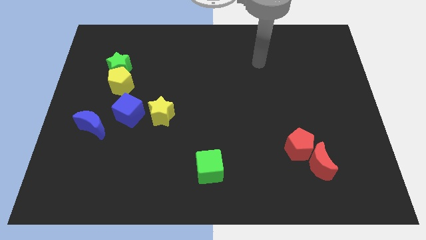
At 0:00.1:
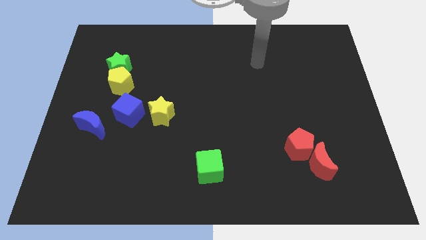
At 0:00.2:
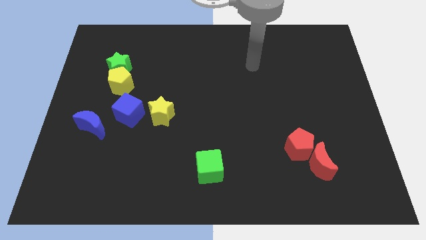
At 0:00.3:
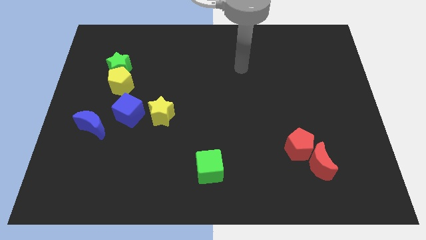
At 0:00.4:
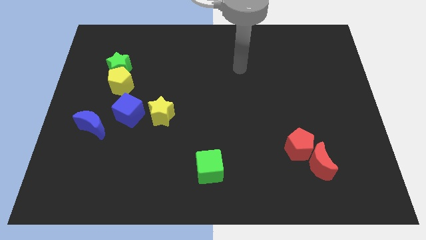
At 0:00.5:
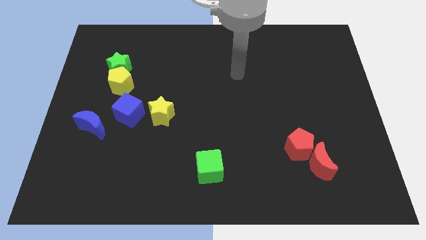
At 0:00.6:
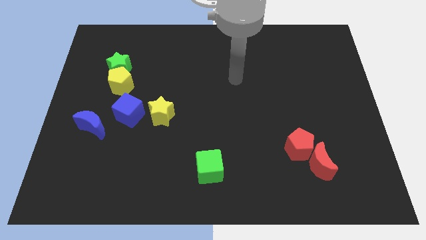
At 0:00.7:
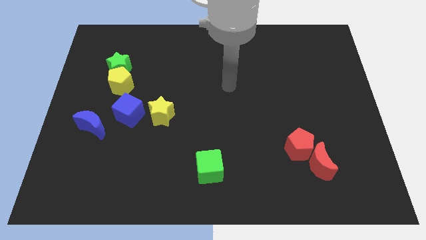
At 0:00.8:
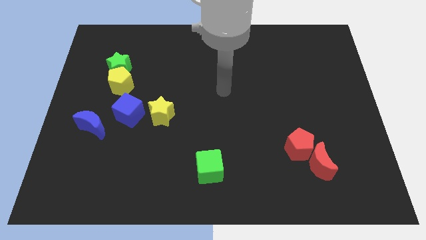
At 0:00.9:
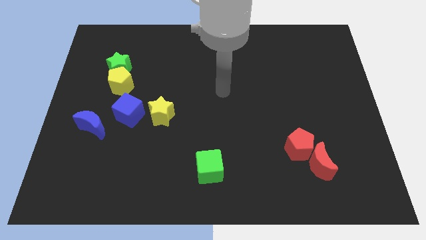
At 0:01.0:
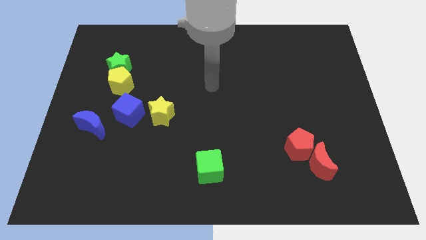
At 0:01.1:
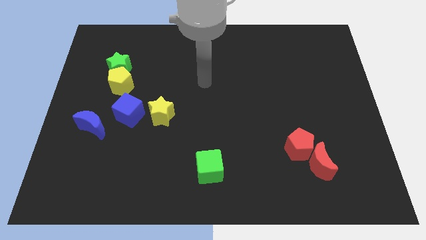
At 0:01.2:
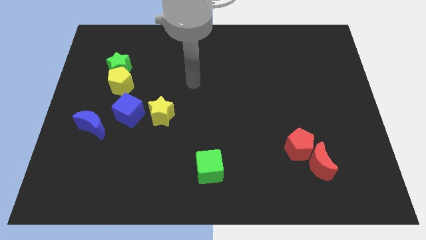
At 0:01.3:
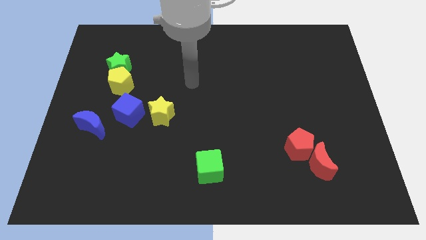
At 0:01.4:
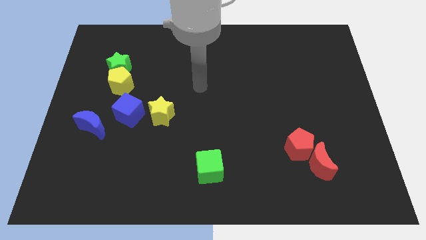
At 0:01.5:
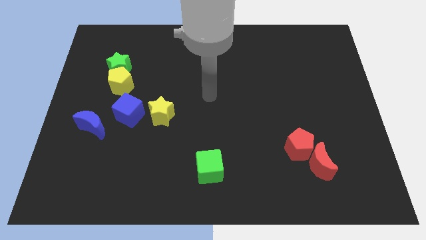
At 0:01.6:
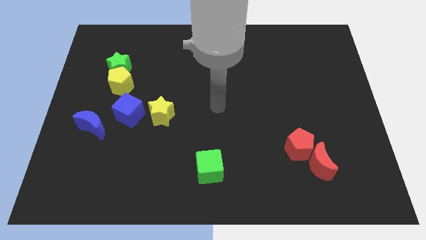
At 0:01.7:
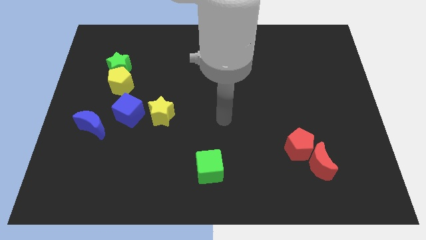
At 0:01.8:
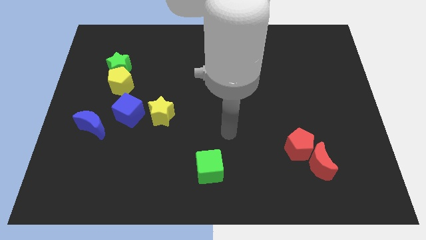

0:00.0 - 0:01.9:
place the arm in the middle of the board

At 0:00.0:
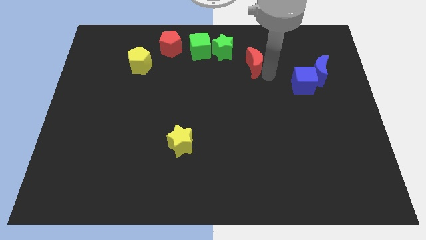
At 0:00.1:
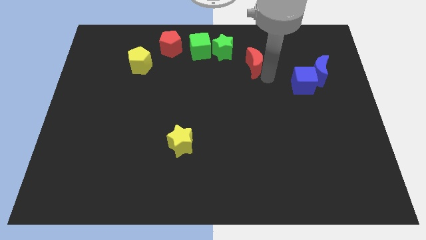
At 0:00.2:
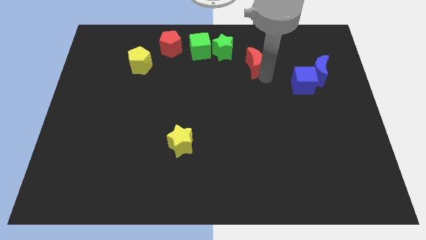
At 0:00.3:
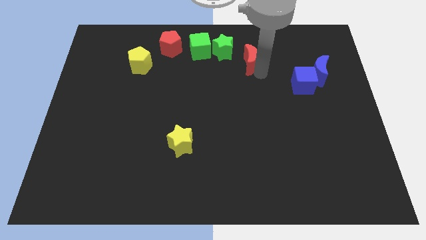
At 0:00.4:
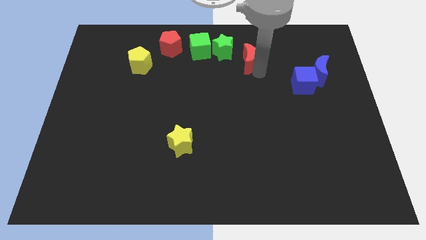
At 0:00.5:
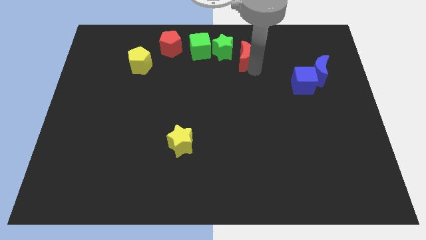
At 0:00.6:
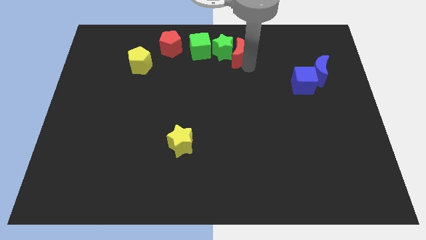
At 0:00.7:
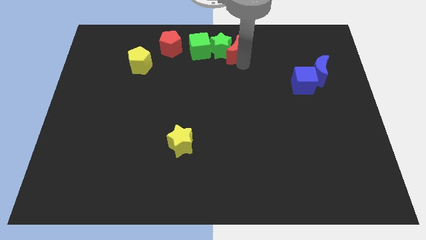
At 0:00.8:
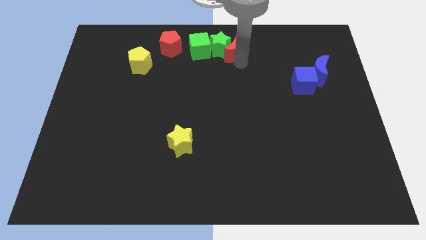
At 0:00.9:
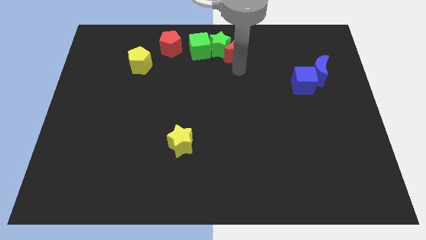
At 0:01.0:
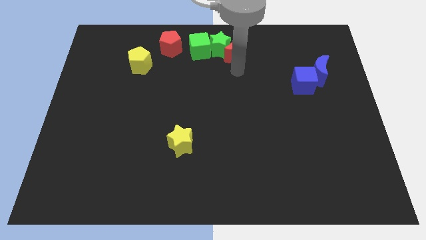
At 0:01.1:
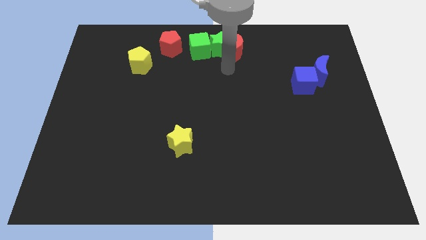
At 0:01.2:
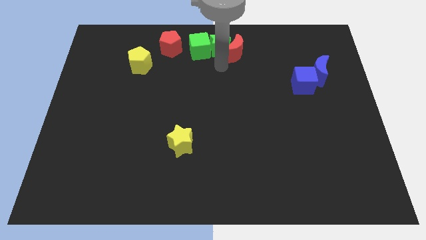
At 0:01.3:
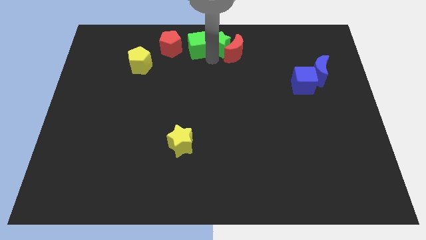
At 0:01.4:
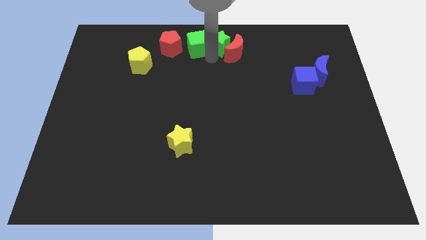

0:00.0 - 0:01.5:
push the red moon into green star

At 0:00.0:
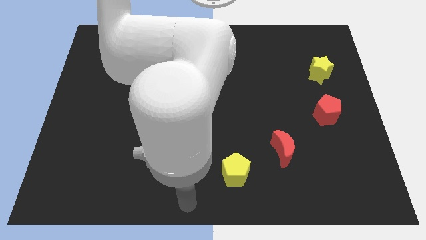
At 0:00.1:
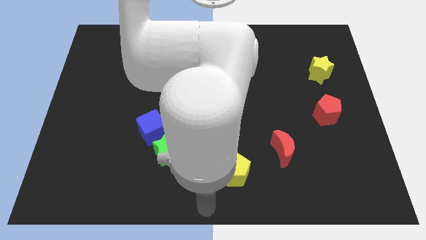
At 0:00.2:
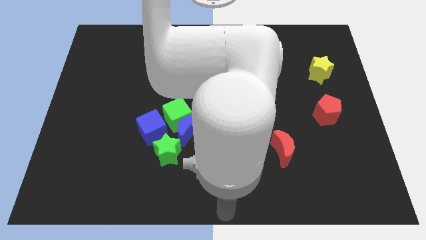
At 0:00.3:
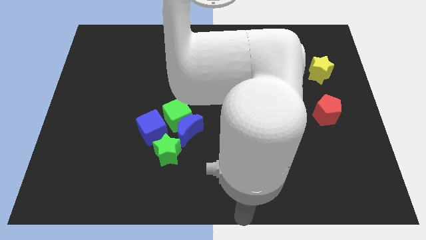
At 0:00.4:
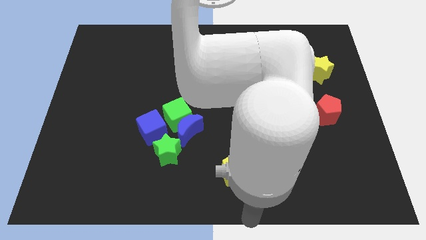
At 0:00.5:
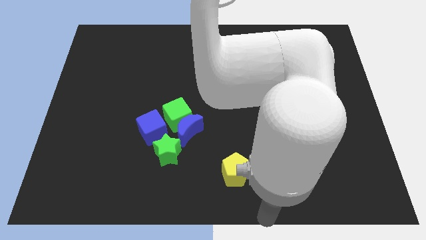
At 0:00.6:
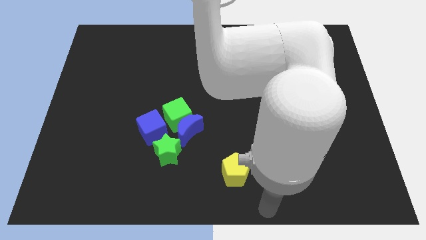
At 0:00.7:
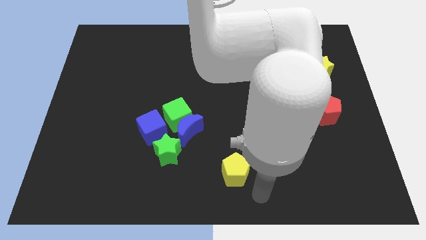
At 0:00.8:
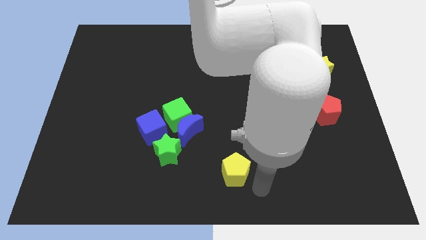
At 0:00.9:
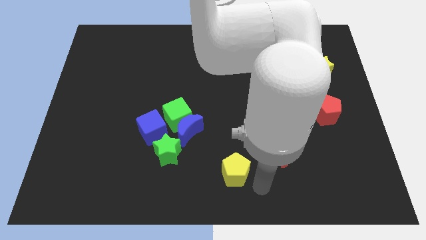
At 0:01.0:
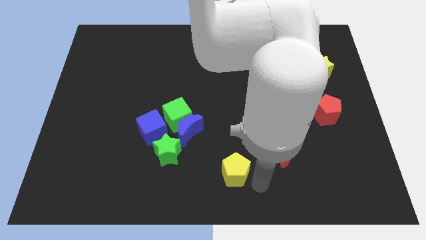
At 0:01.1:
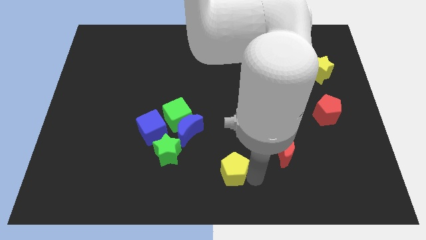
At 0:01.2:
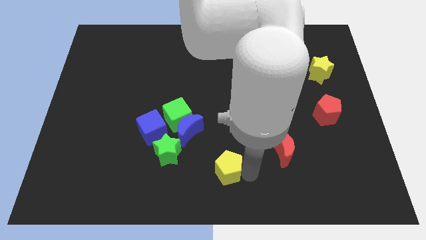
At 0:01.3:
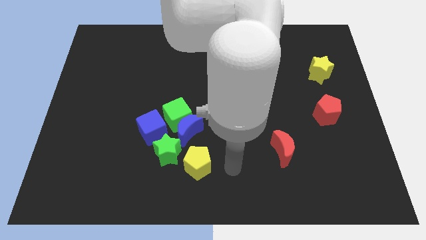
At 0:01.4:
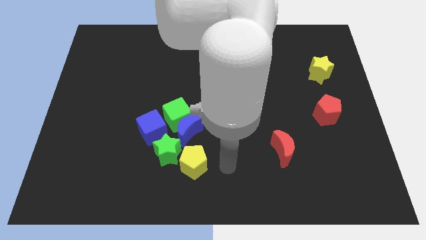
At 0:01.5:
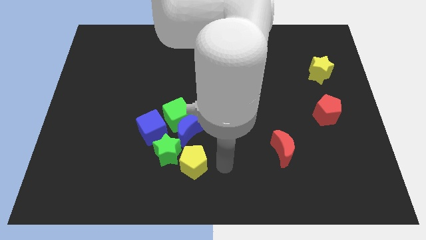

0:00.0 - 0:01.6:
push the yellow pentagon to the bottom of the green star

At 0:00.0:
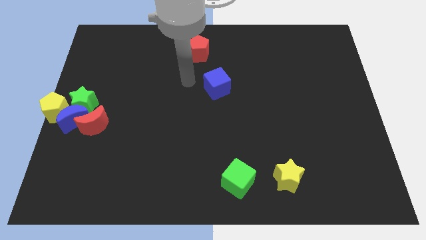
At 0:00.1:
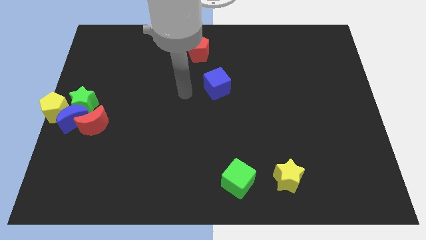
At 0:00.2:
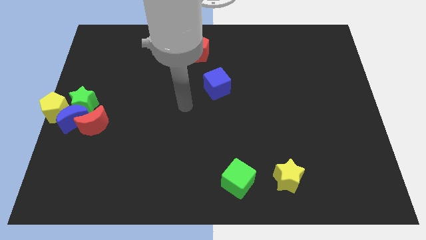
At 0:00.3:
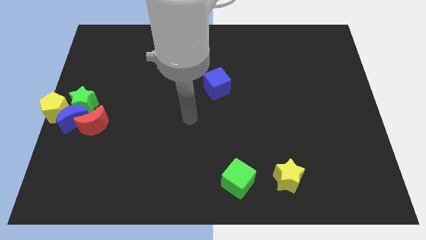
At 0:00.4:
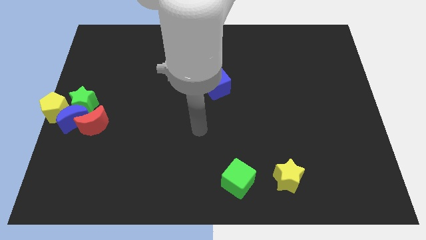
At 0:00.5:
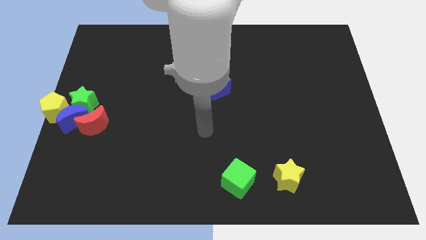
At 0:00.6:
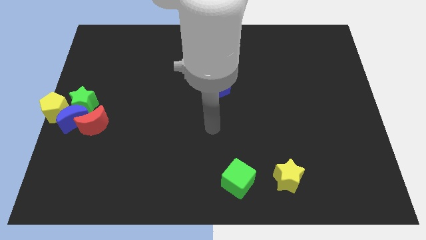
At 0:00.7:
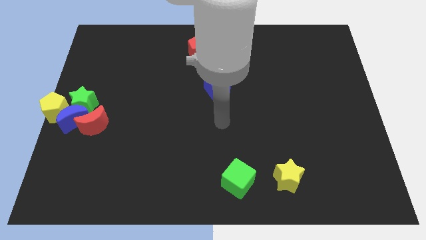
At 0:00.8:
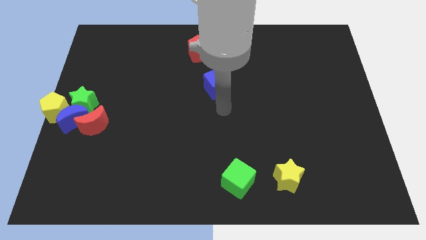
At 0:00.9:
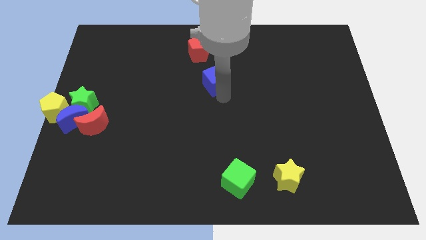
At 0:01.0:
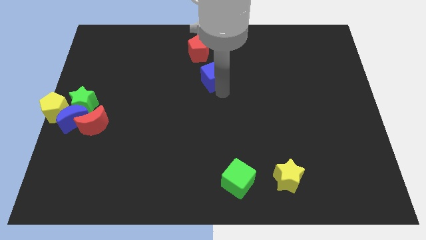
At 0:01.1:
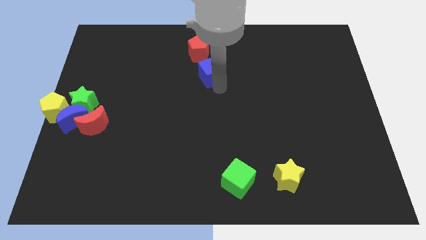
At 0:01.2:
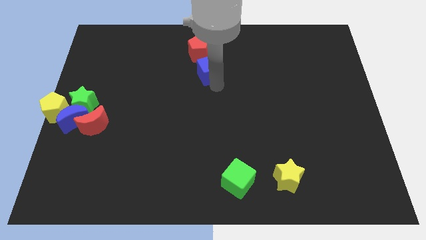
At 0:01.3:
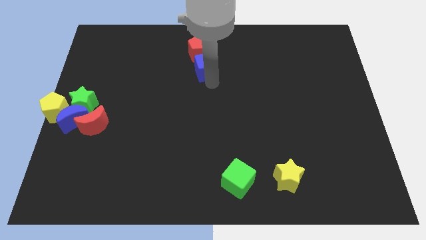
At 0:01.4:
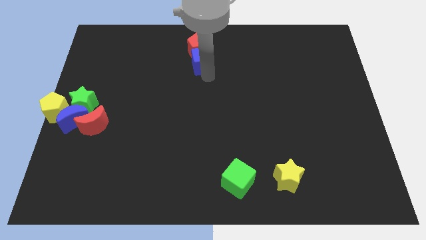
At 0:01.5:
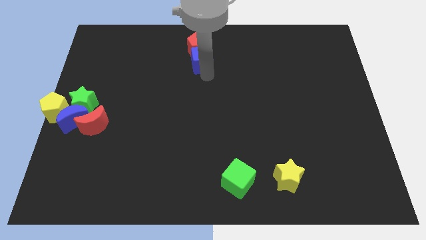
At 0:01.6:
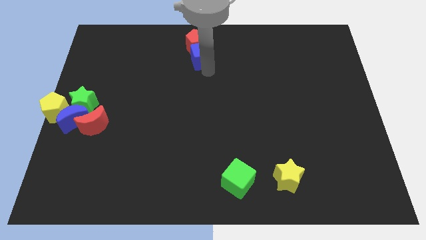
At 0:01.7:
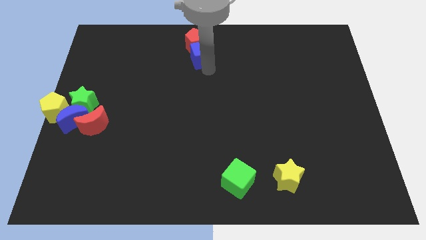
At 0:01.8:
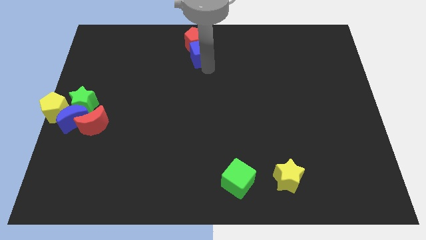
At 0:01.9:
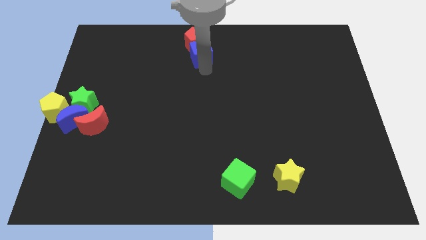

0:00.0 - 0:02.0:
move the blue cube into the red pentagon

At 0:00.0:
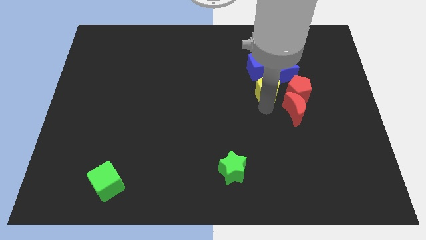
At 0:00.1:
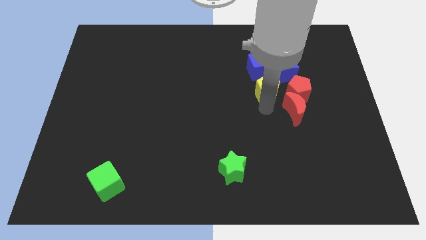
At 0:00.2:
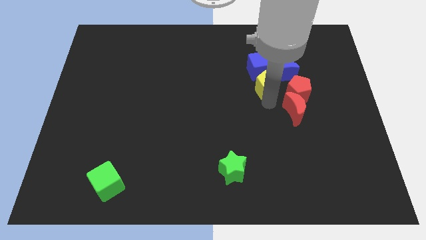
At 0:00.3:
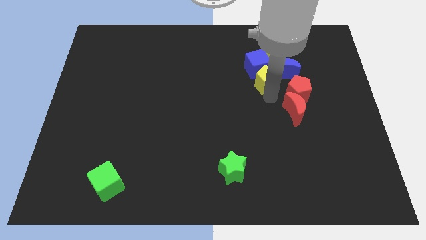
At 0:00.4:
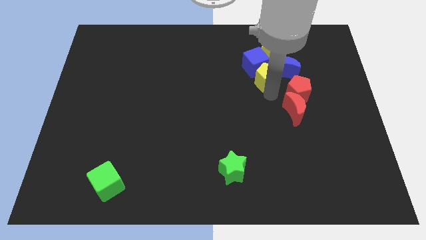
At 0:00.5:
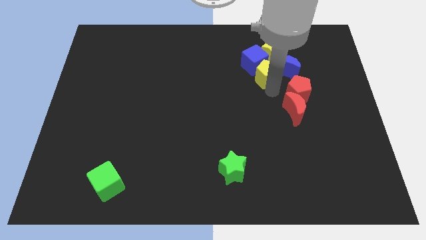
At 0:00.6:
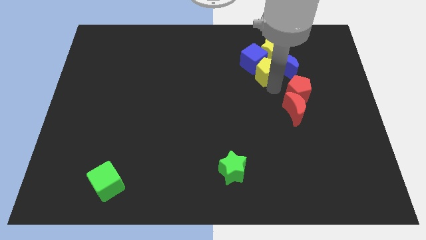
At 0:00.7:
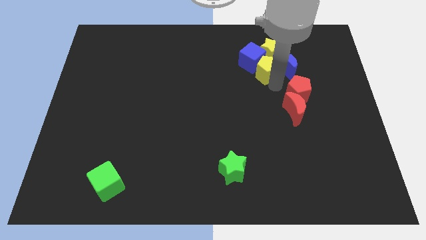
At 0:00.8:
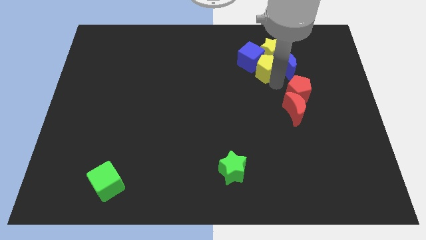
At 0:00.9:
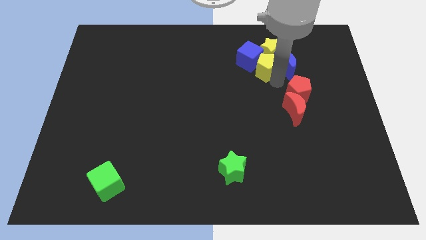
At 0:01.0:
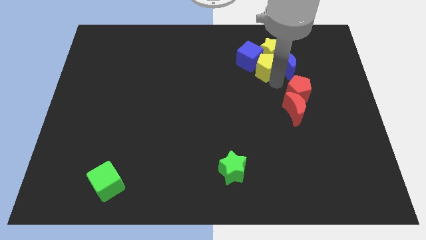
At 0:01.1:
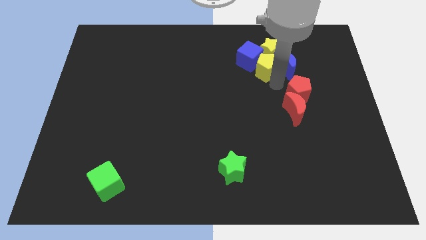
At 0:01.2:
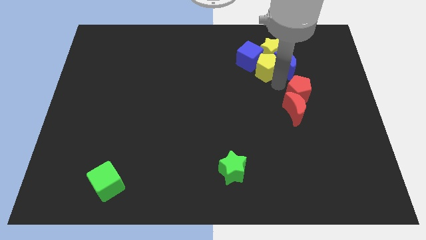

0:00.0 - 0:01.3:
push yellow pentagon into yellow star

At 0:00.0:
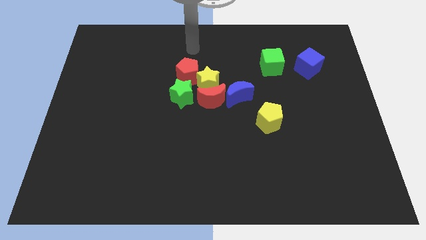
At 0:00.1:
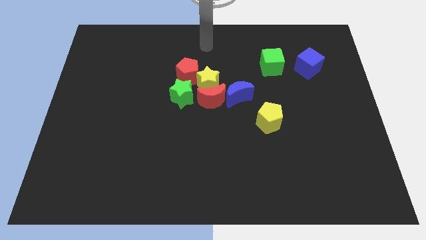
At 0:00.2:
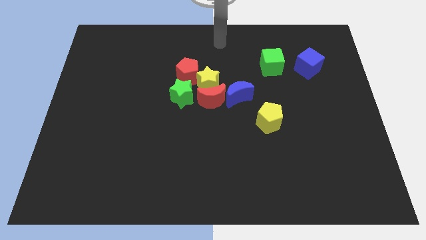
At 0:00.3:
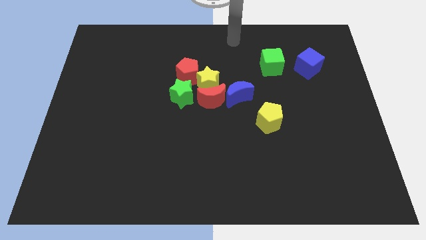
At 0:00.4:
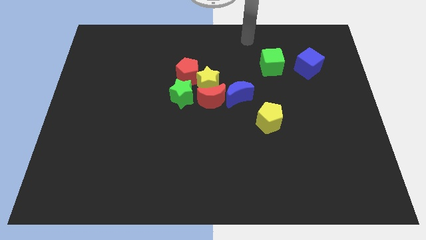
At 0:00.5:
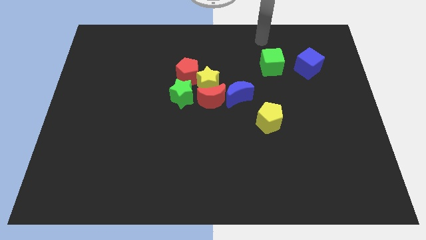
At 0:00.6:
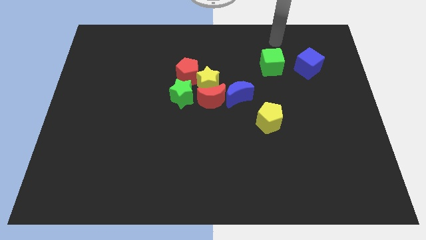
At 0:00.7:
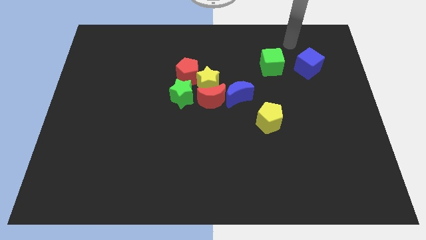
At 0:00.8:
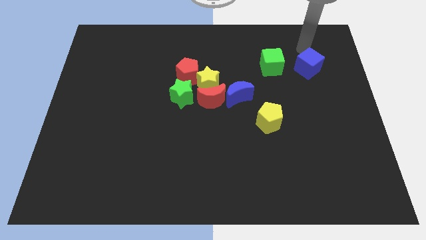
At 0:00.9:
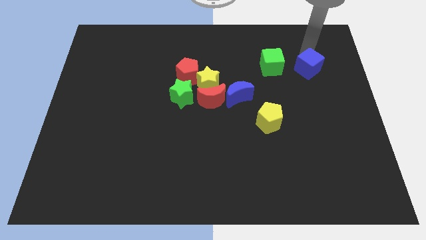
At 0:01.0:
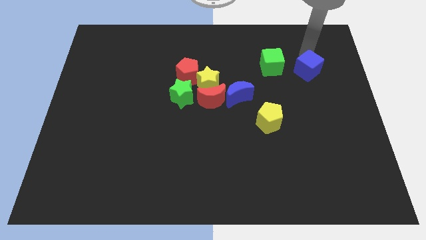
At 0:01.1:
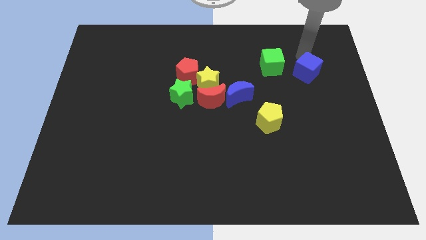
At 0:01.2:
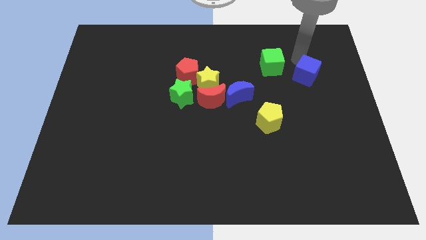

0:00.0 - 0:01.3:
push the blue cube slightly to the bottom
